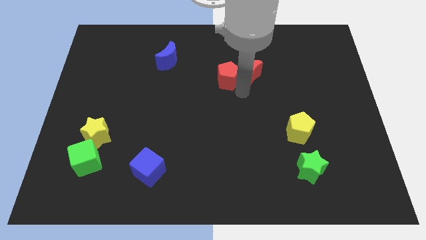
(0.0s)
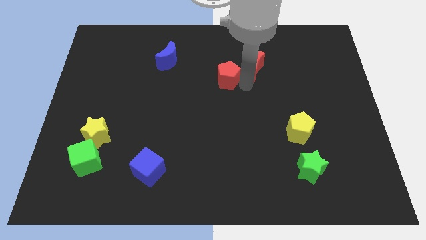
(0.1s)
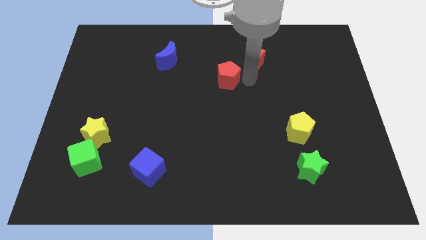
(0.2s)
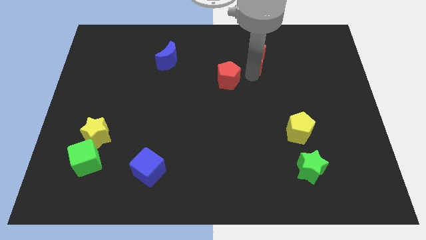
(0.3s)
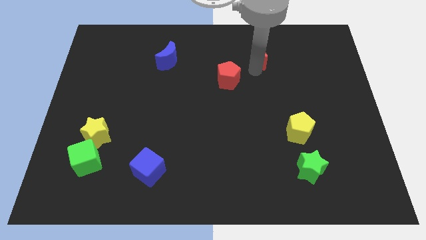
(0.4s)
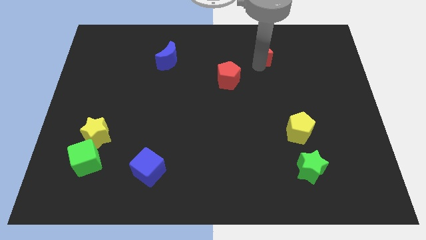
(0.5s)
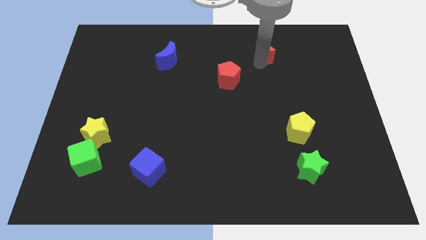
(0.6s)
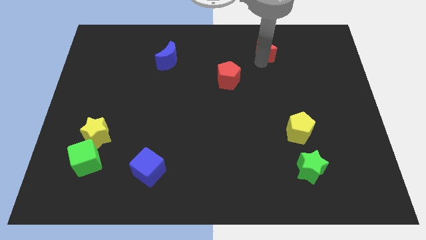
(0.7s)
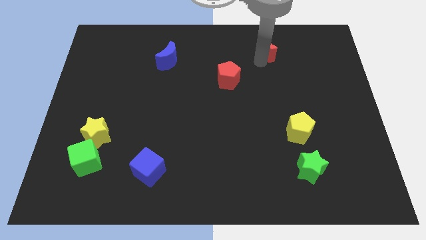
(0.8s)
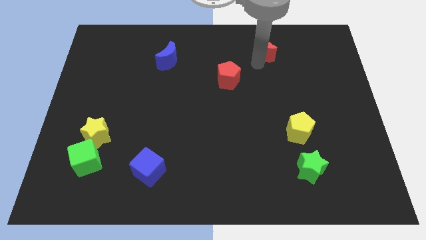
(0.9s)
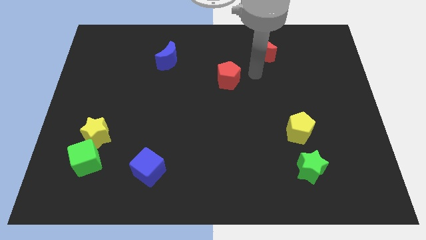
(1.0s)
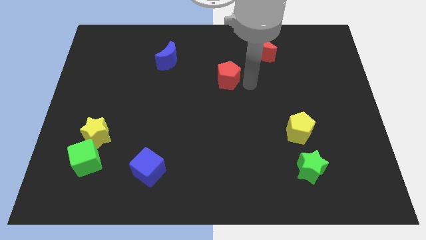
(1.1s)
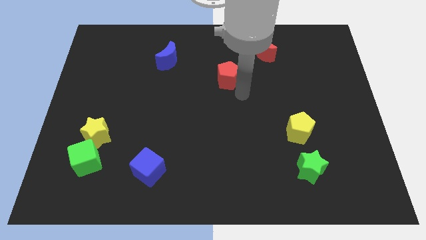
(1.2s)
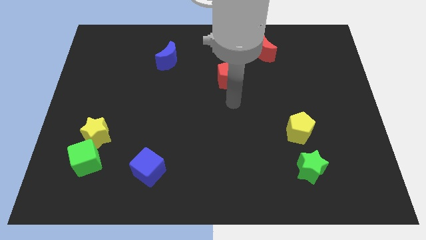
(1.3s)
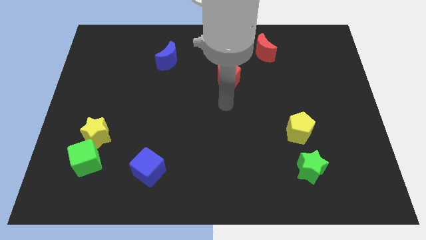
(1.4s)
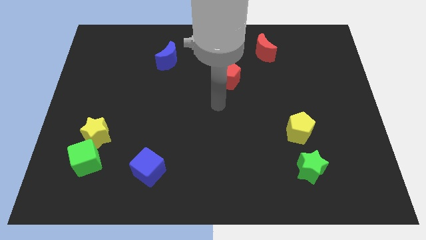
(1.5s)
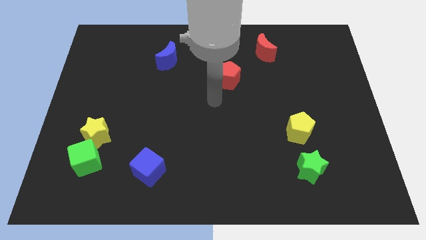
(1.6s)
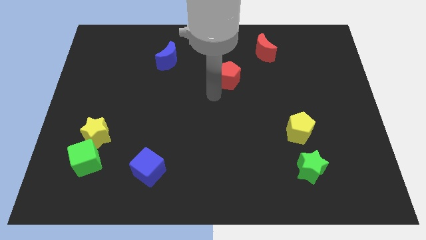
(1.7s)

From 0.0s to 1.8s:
separate the red crescent from the red pentagon

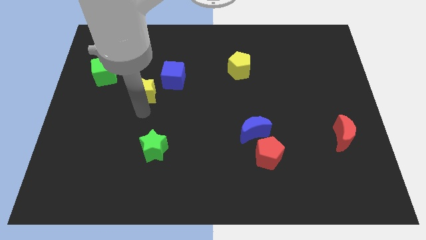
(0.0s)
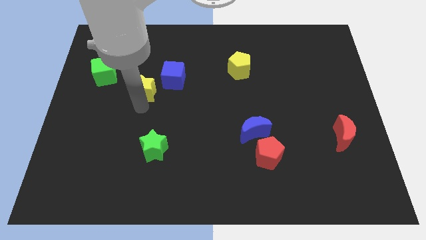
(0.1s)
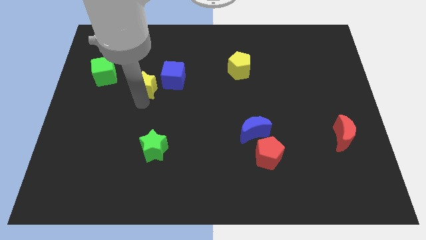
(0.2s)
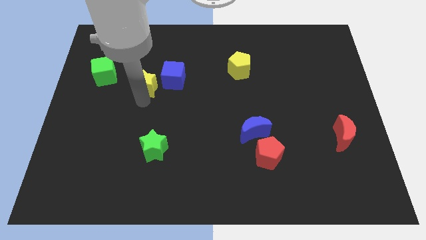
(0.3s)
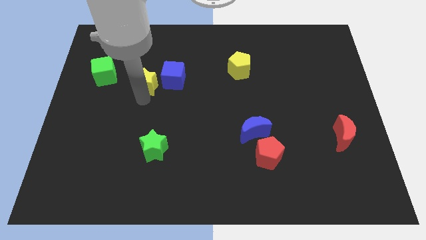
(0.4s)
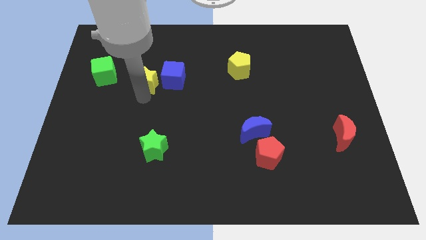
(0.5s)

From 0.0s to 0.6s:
move the yellow star to the left of blue cube

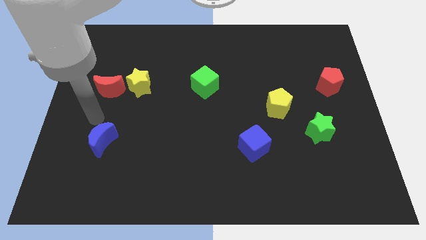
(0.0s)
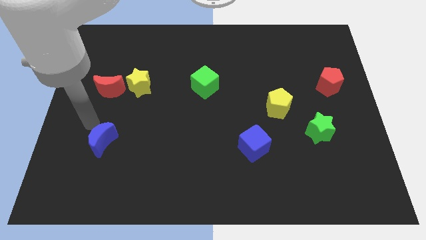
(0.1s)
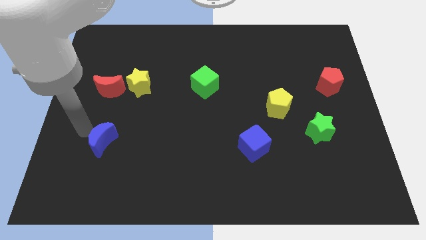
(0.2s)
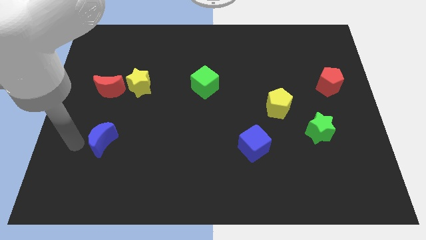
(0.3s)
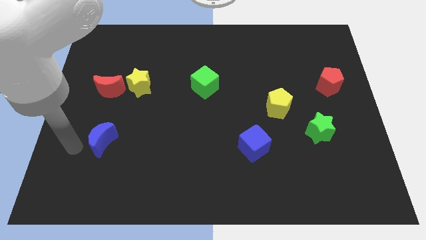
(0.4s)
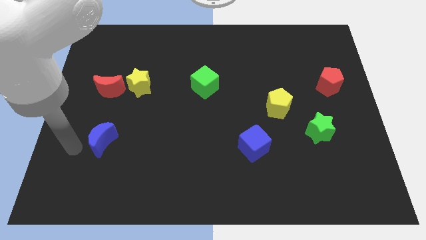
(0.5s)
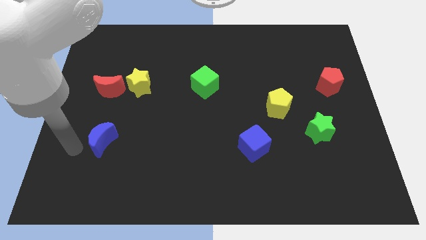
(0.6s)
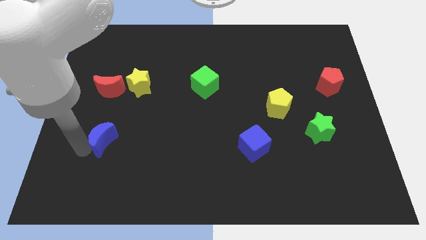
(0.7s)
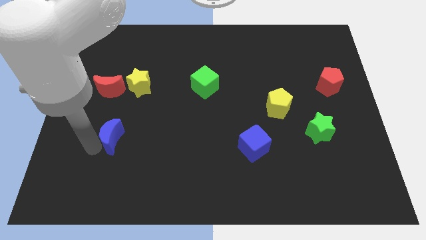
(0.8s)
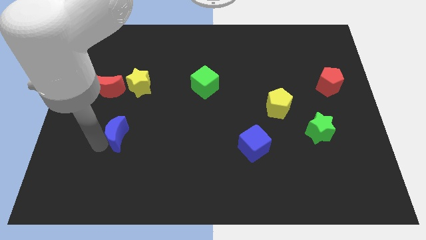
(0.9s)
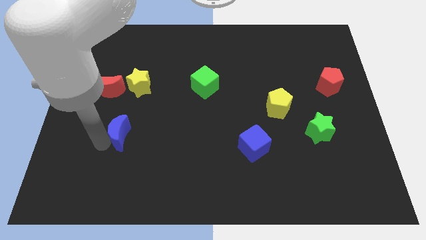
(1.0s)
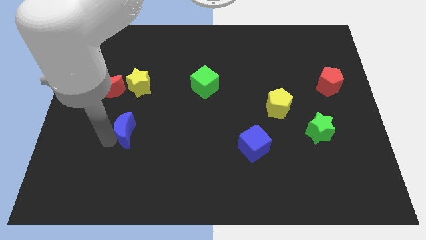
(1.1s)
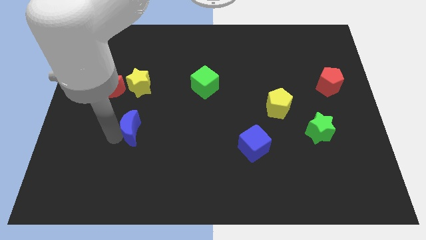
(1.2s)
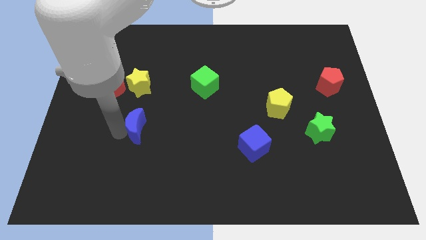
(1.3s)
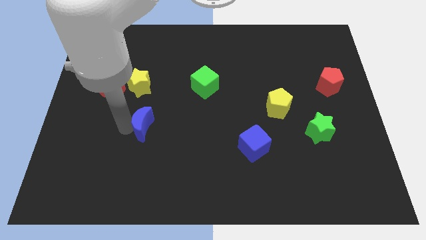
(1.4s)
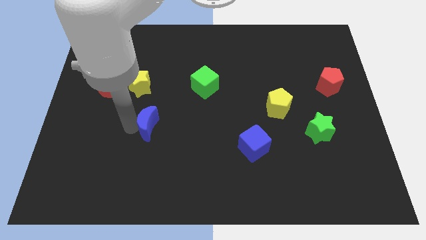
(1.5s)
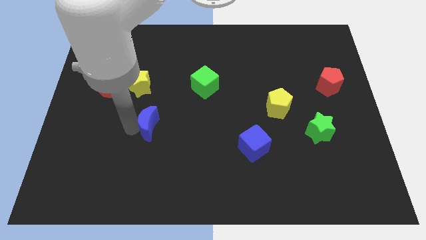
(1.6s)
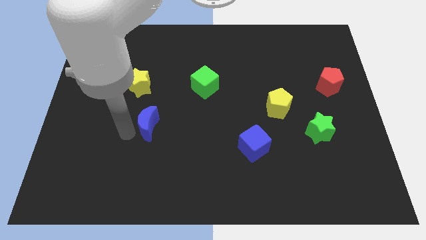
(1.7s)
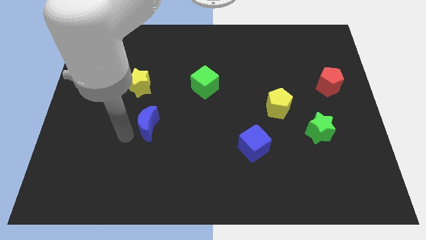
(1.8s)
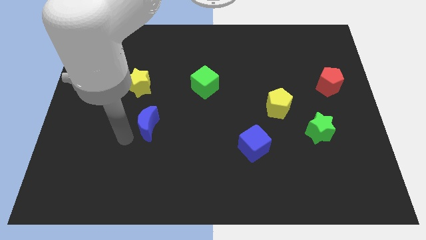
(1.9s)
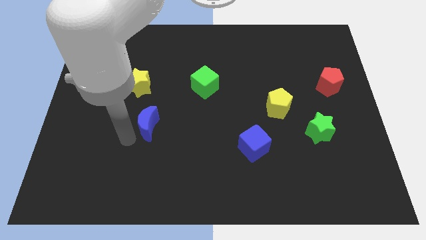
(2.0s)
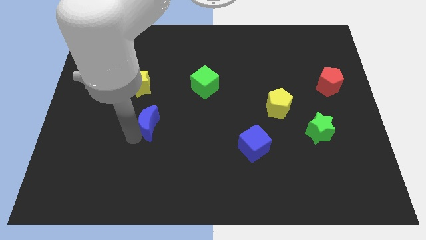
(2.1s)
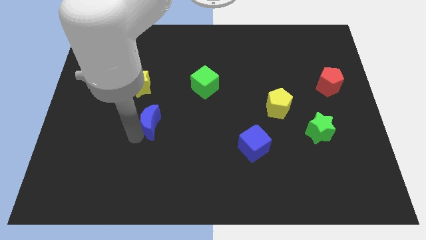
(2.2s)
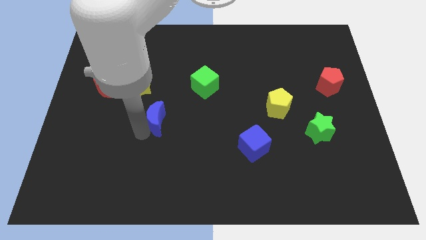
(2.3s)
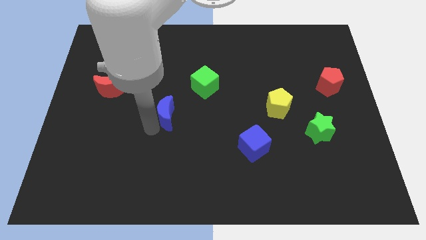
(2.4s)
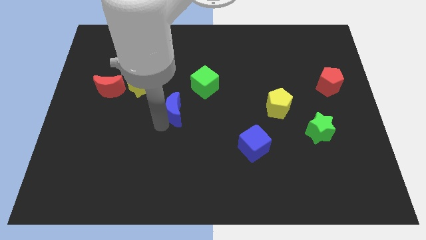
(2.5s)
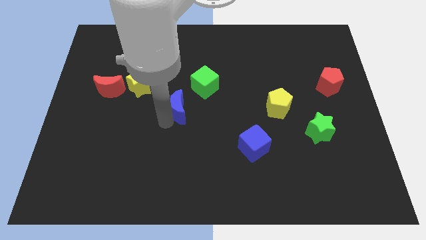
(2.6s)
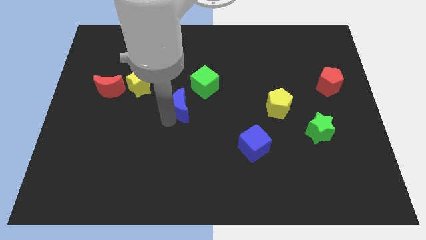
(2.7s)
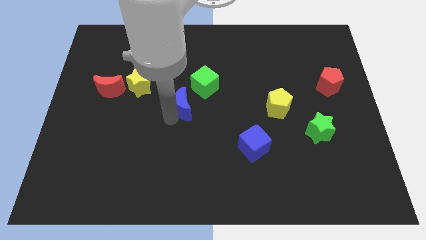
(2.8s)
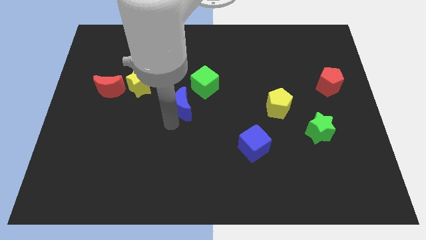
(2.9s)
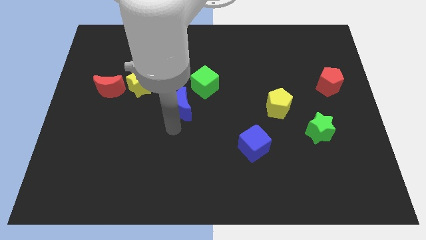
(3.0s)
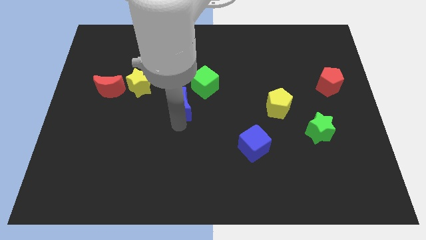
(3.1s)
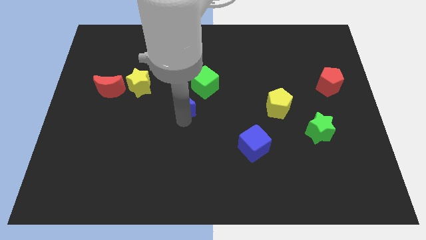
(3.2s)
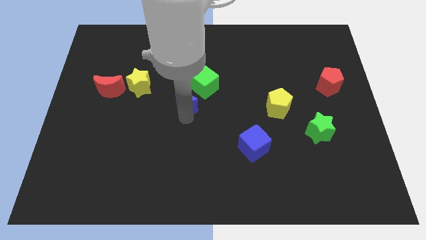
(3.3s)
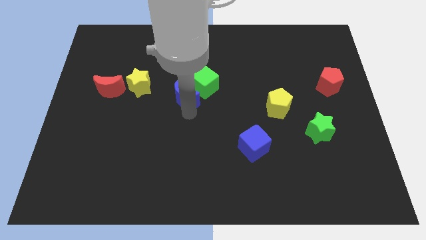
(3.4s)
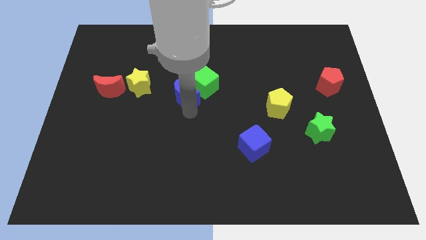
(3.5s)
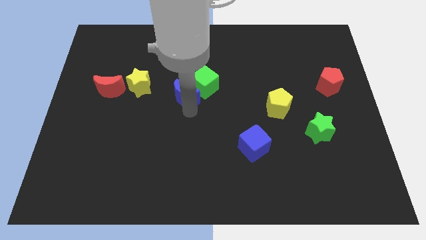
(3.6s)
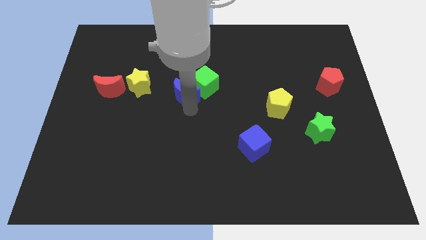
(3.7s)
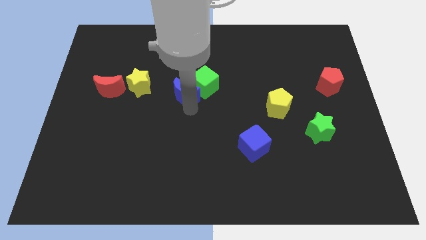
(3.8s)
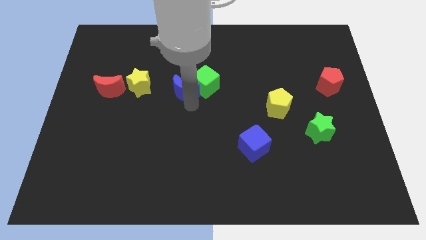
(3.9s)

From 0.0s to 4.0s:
move blue moon to the bottom of green cube

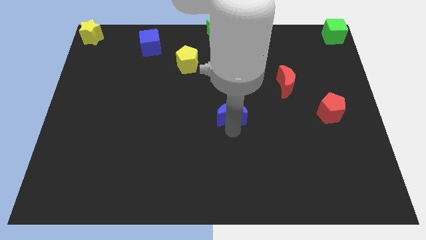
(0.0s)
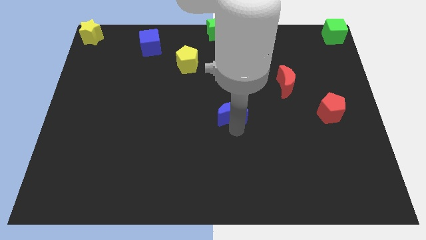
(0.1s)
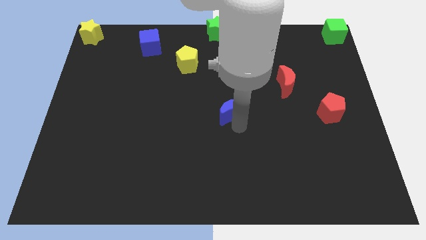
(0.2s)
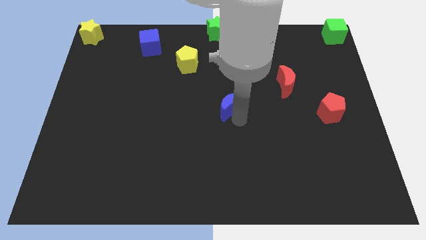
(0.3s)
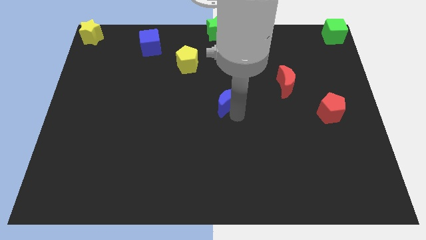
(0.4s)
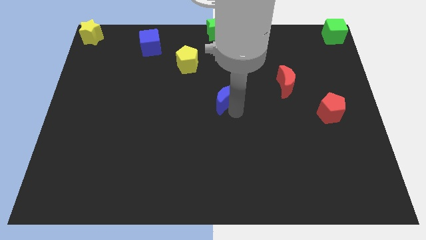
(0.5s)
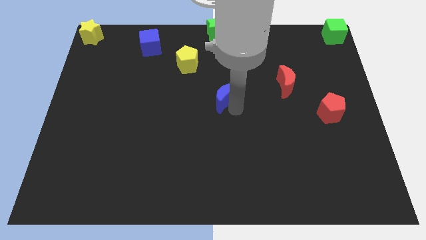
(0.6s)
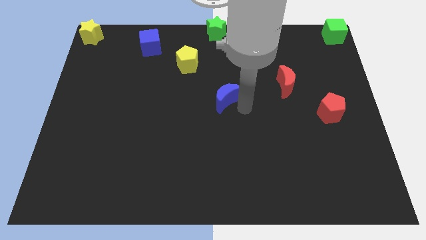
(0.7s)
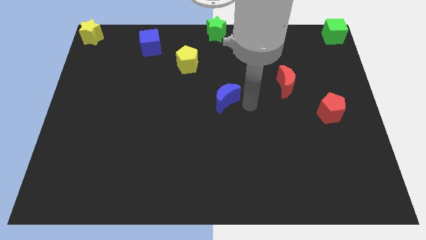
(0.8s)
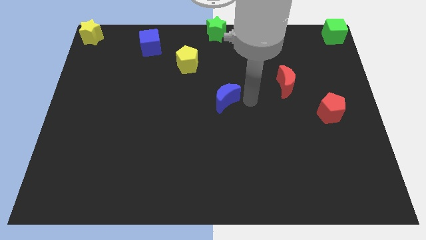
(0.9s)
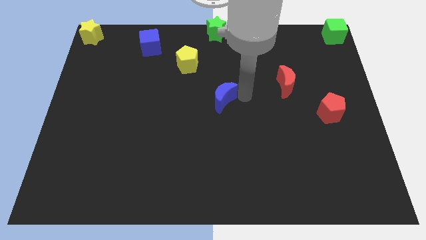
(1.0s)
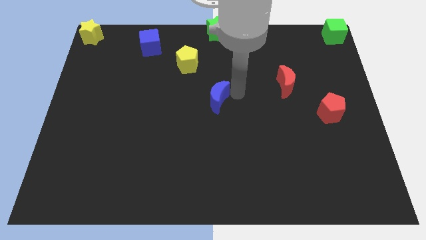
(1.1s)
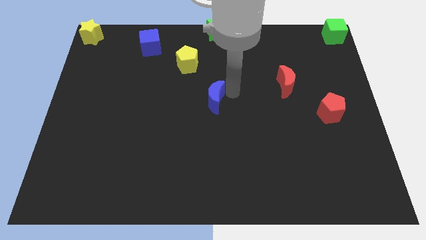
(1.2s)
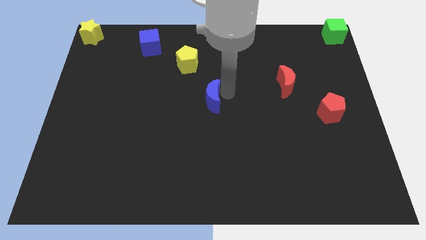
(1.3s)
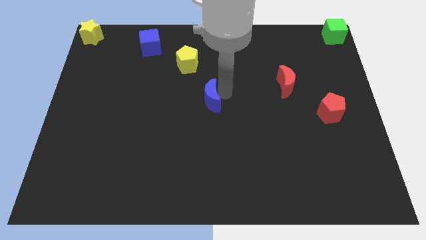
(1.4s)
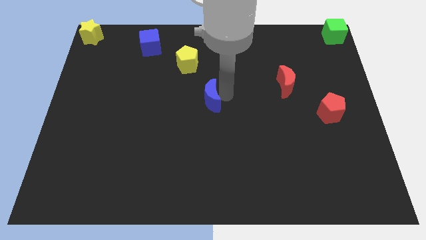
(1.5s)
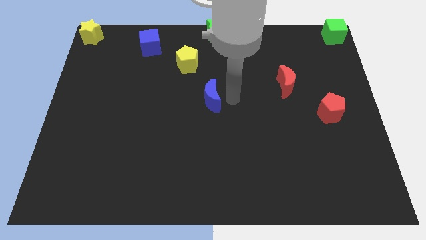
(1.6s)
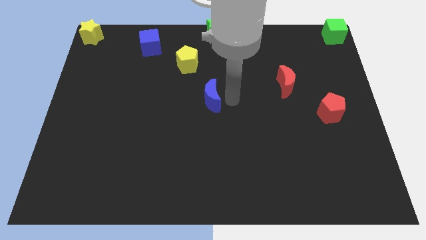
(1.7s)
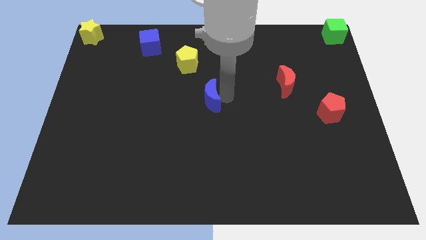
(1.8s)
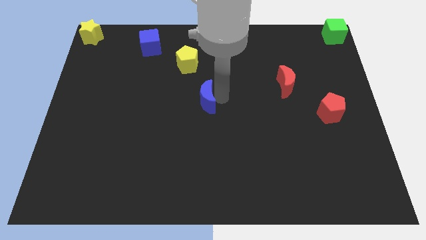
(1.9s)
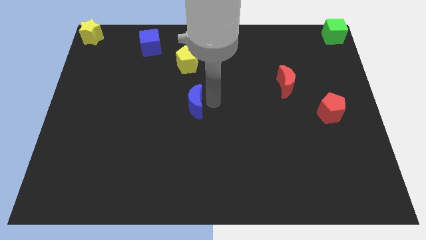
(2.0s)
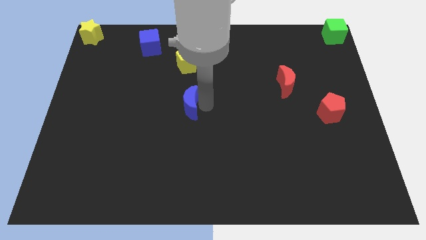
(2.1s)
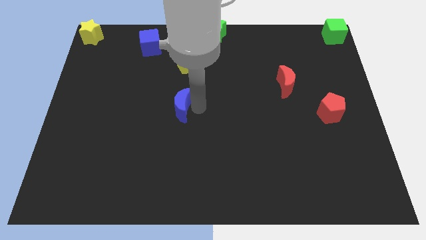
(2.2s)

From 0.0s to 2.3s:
push the blue crescent to the bottom of the yellow pentagon

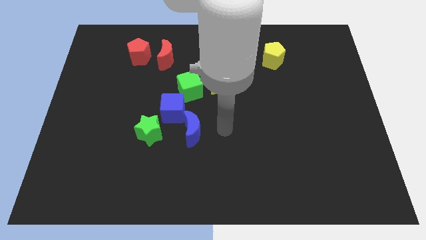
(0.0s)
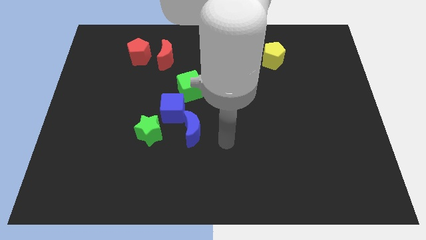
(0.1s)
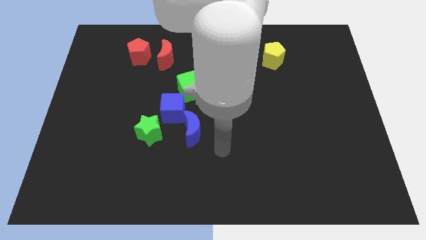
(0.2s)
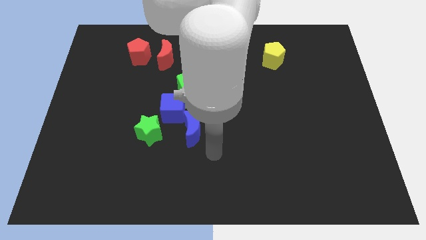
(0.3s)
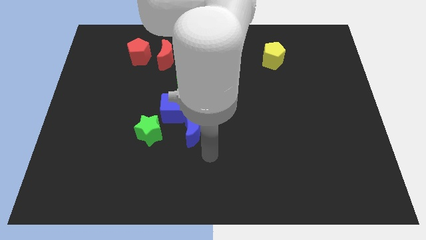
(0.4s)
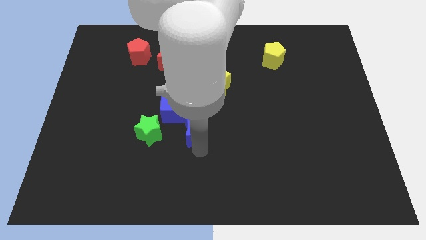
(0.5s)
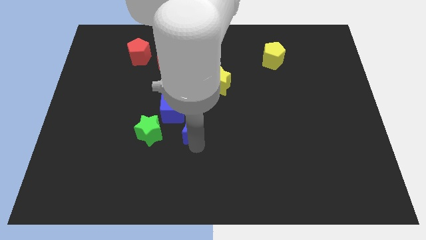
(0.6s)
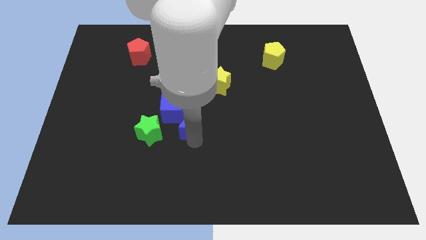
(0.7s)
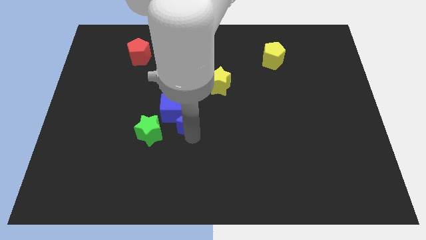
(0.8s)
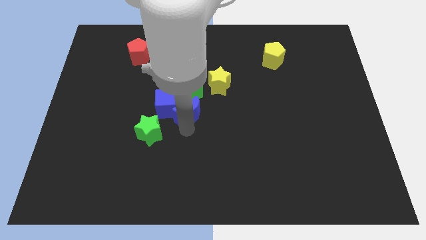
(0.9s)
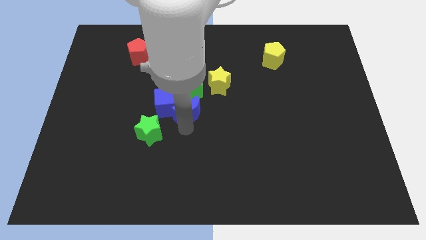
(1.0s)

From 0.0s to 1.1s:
push blue crescent into blue cube
